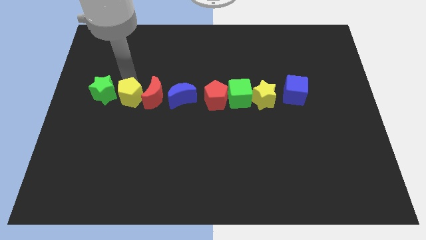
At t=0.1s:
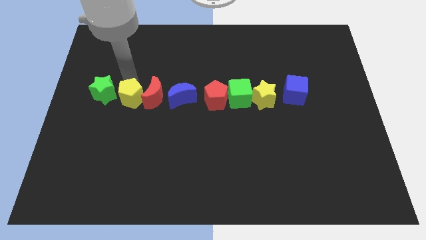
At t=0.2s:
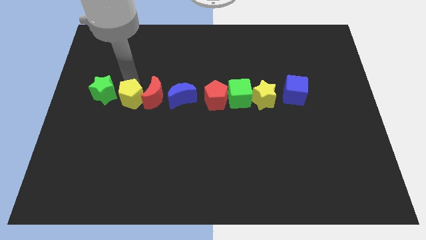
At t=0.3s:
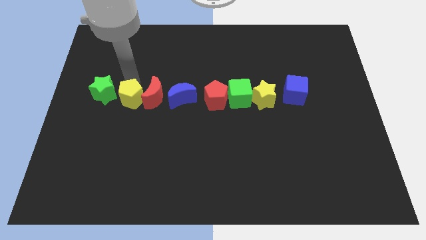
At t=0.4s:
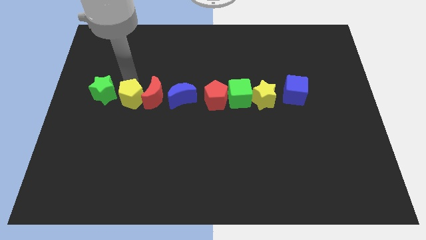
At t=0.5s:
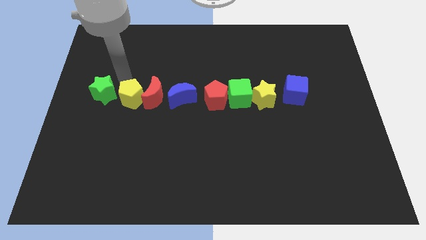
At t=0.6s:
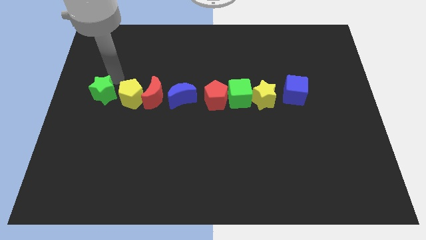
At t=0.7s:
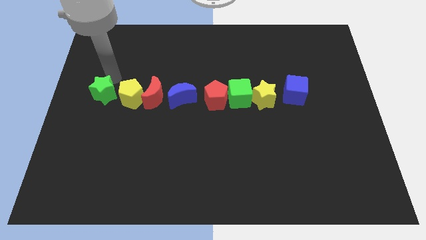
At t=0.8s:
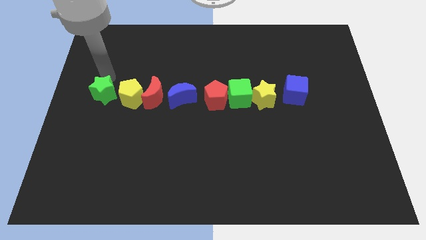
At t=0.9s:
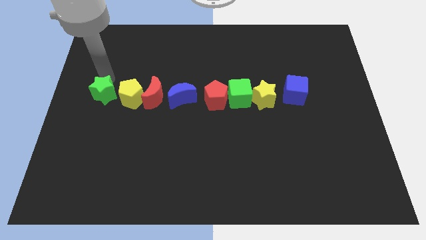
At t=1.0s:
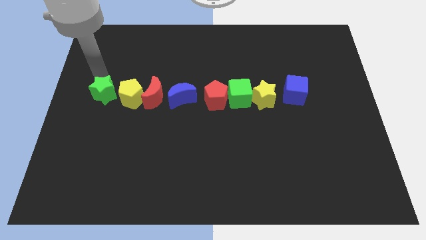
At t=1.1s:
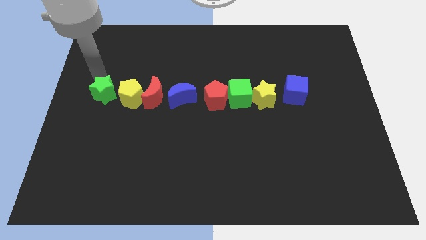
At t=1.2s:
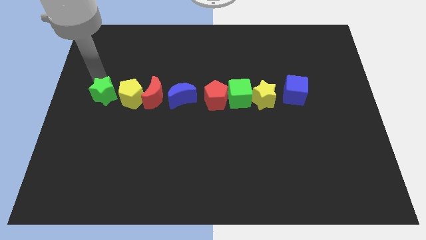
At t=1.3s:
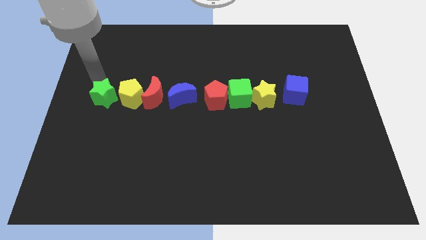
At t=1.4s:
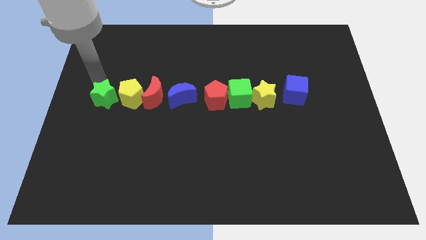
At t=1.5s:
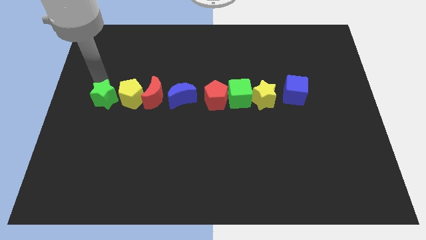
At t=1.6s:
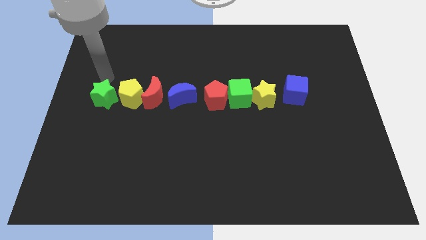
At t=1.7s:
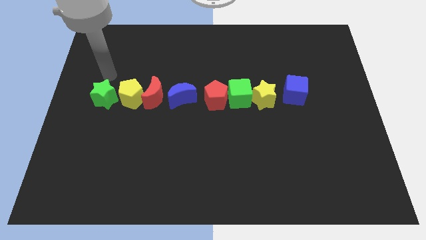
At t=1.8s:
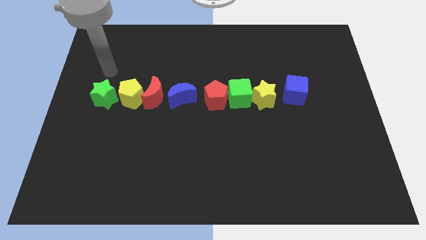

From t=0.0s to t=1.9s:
arrange all the blocks in a horizontal line

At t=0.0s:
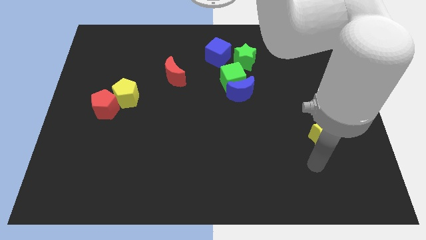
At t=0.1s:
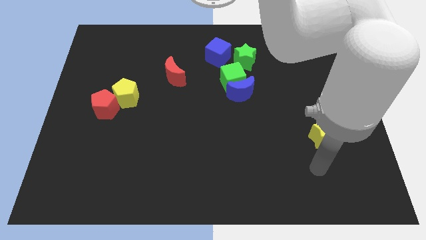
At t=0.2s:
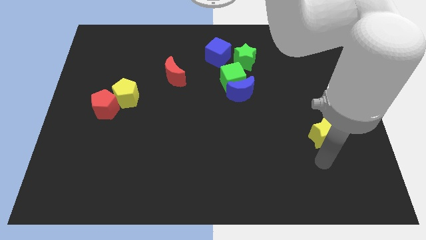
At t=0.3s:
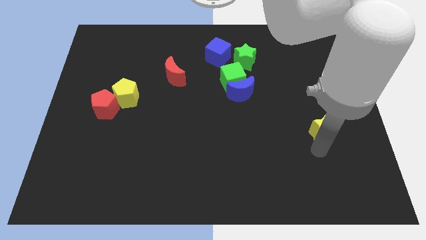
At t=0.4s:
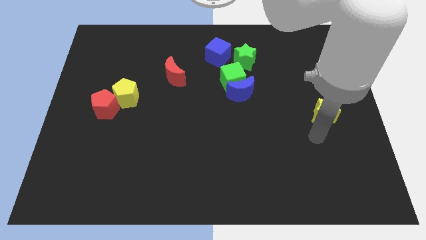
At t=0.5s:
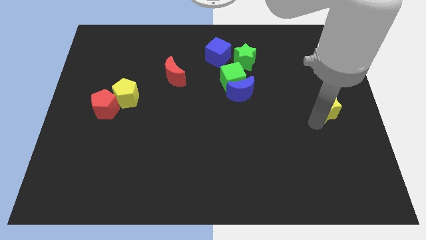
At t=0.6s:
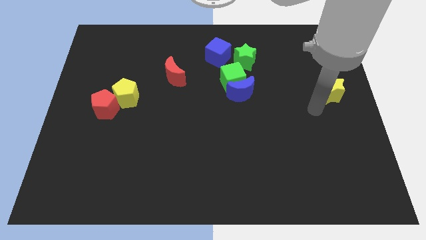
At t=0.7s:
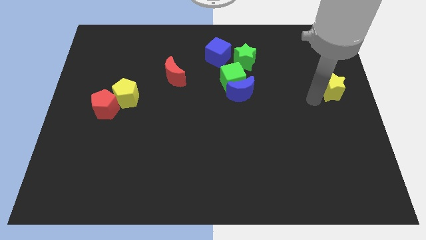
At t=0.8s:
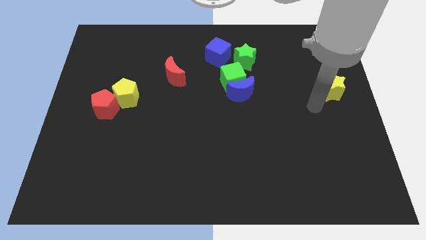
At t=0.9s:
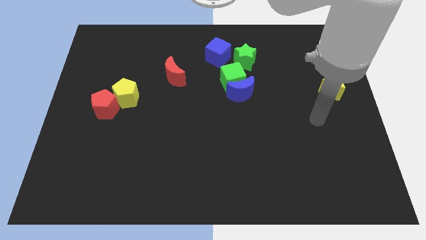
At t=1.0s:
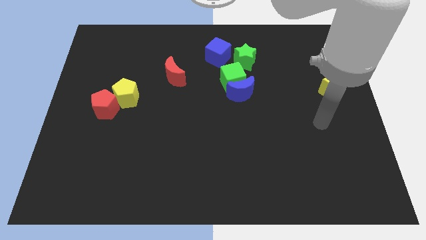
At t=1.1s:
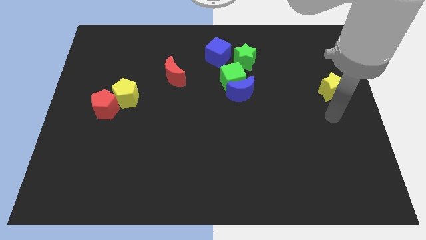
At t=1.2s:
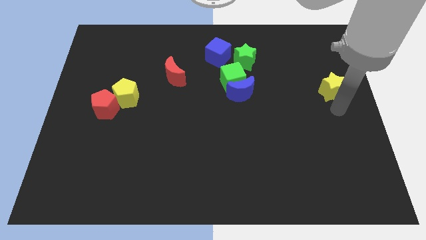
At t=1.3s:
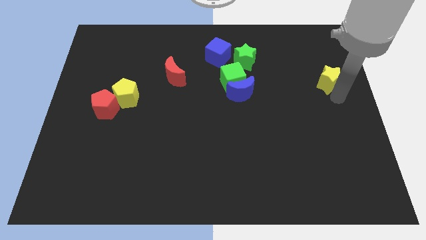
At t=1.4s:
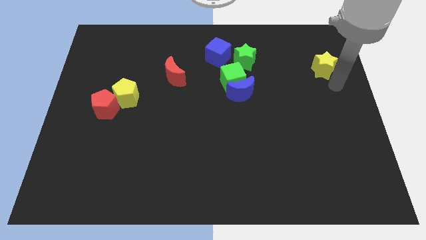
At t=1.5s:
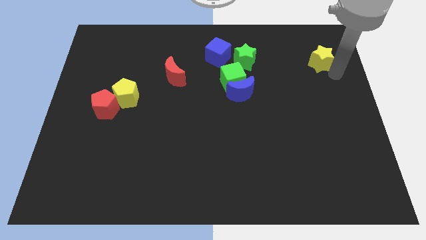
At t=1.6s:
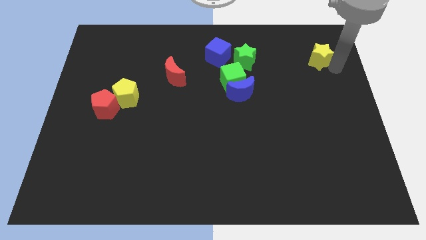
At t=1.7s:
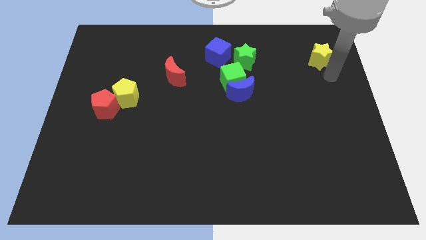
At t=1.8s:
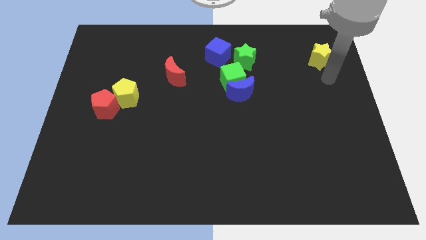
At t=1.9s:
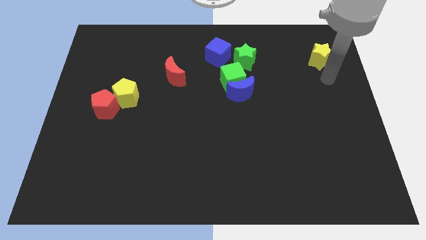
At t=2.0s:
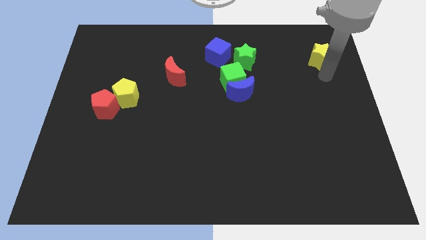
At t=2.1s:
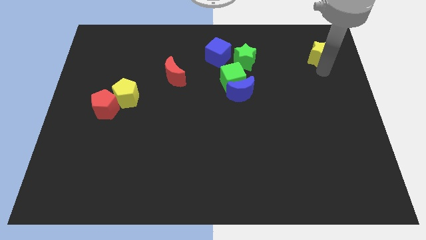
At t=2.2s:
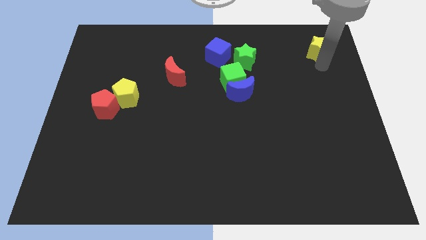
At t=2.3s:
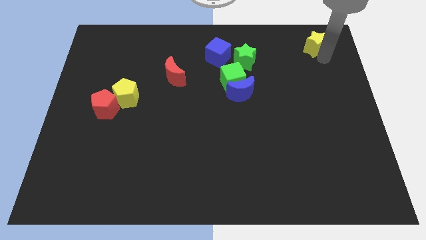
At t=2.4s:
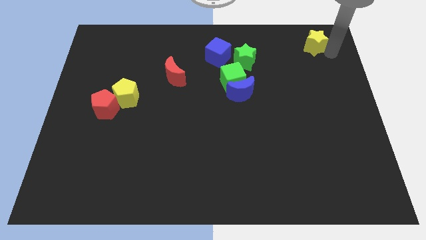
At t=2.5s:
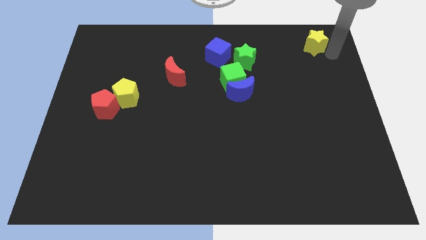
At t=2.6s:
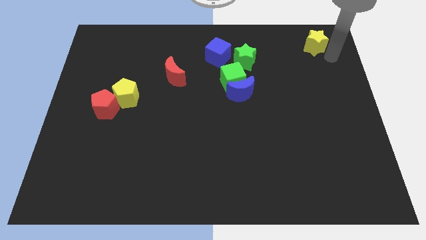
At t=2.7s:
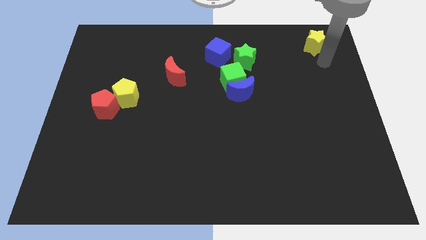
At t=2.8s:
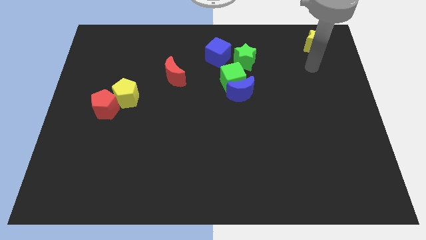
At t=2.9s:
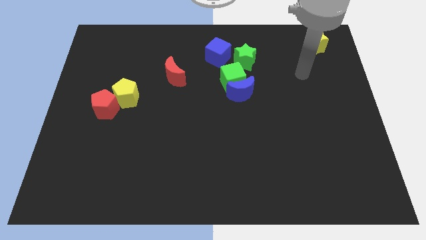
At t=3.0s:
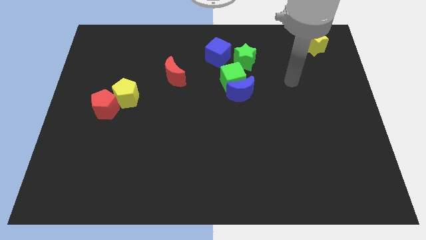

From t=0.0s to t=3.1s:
push the yellow star to the top right corner

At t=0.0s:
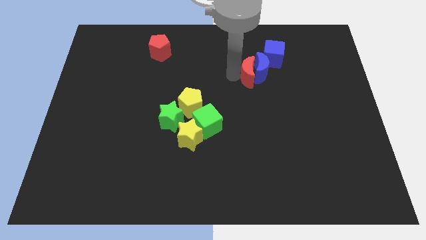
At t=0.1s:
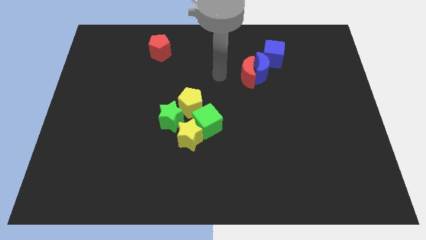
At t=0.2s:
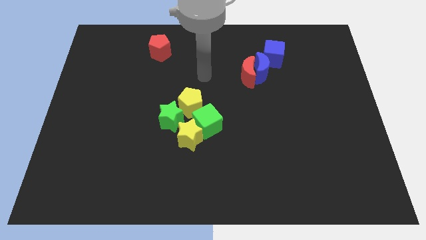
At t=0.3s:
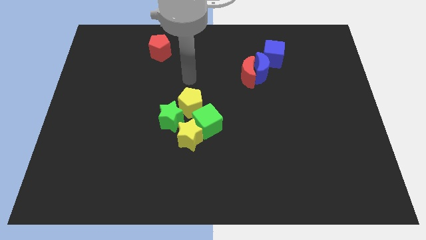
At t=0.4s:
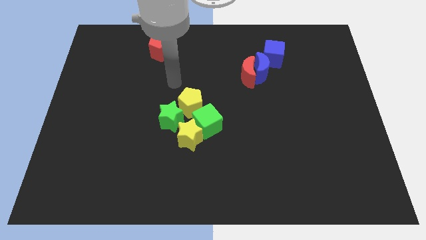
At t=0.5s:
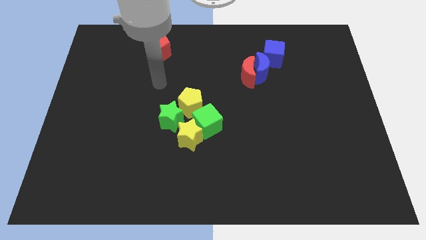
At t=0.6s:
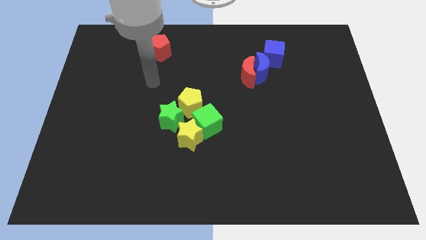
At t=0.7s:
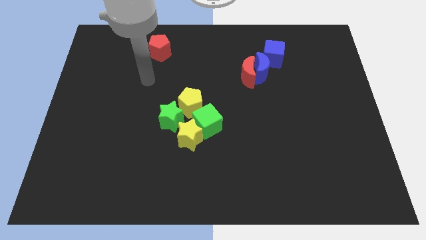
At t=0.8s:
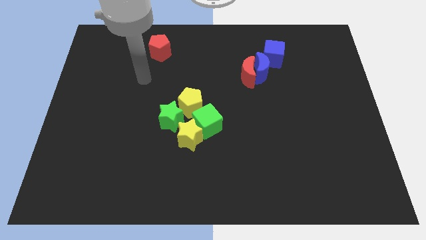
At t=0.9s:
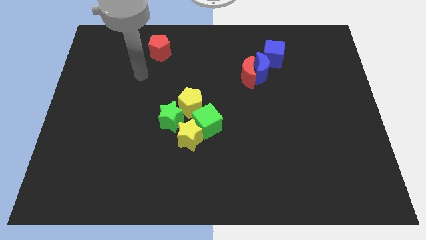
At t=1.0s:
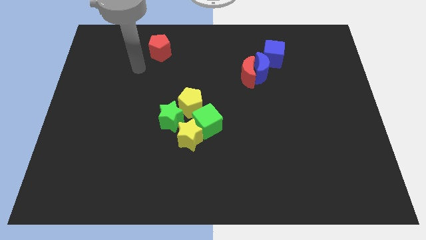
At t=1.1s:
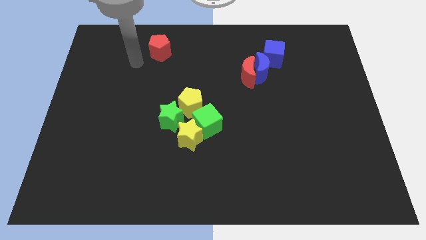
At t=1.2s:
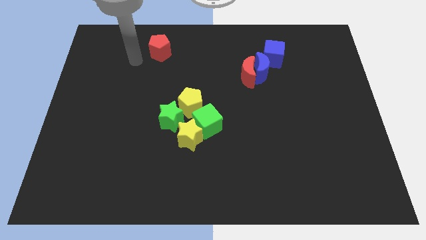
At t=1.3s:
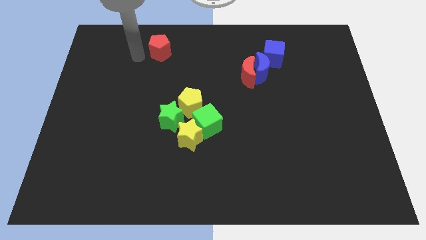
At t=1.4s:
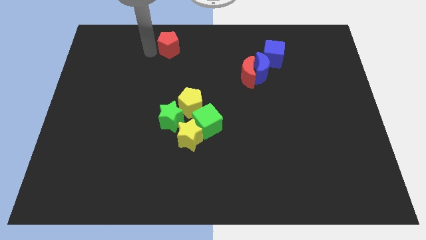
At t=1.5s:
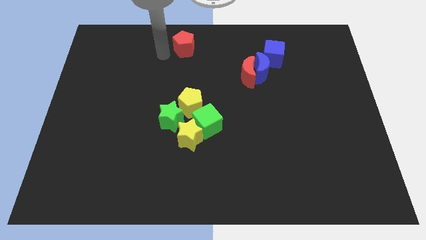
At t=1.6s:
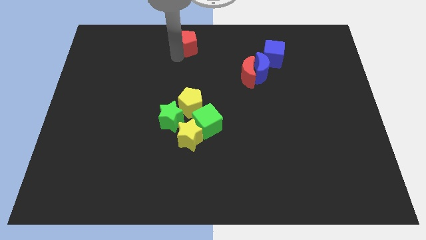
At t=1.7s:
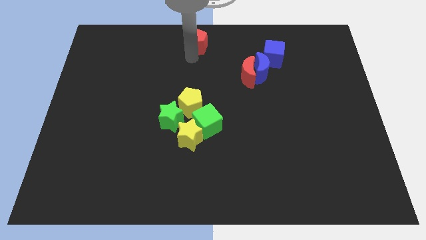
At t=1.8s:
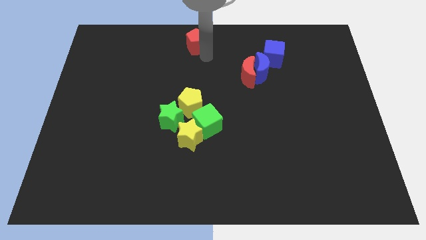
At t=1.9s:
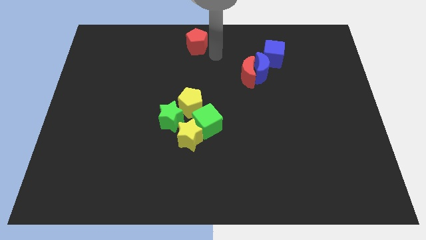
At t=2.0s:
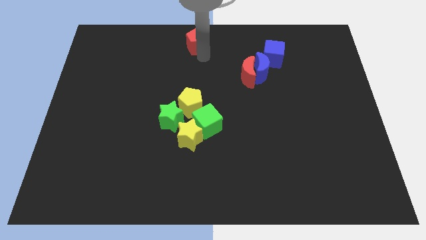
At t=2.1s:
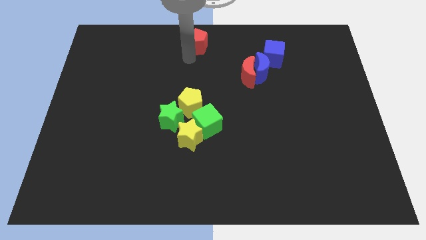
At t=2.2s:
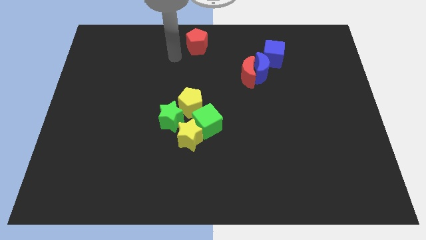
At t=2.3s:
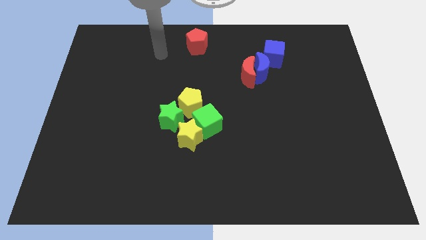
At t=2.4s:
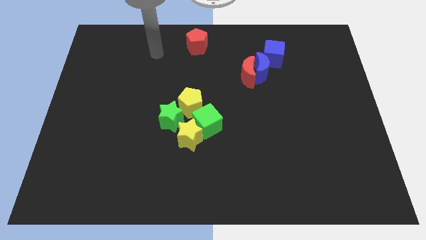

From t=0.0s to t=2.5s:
place red pentagon to the top center of board

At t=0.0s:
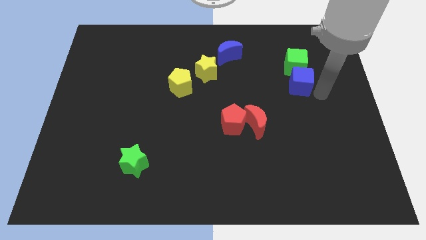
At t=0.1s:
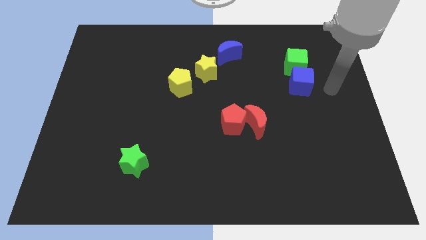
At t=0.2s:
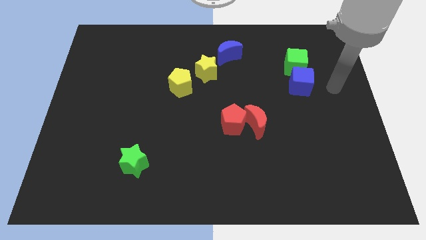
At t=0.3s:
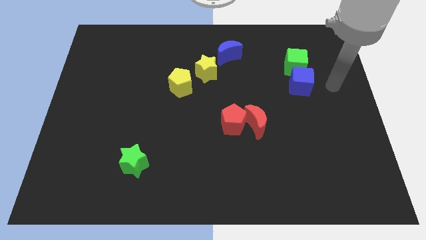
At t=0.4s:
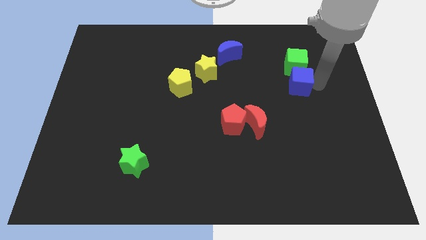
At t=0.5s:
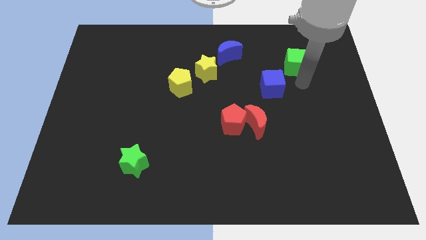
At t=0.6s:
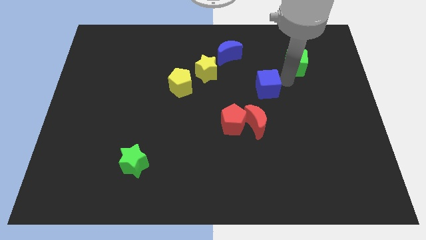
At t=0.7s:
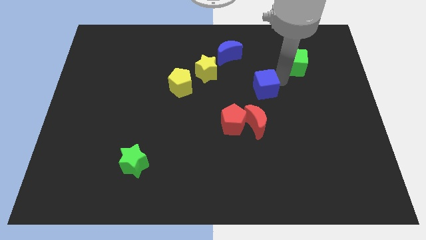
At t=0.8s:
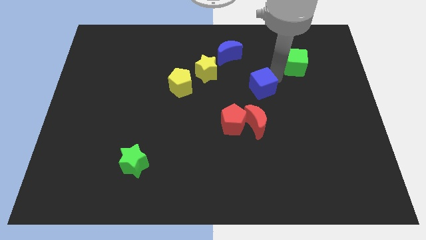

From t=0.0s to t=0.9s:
push the blue cube to the left

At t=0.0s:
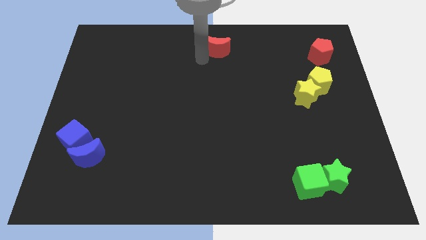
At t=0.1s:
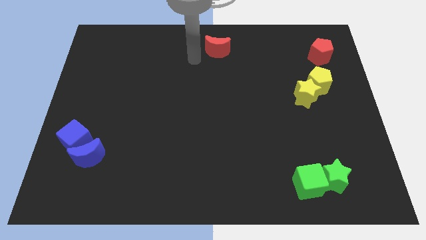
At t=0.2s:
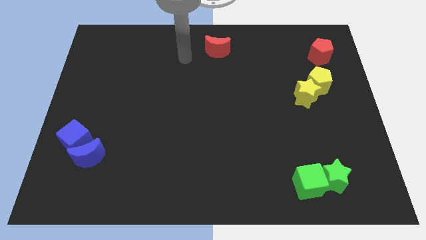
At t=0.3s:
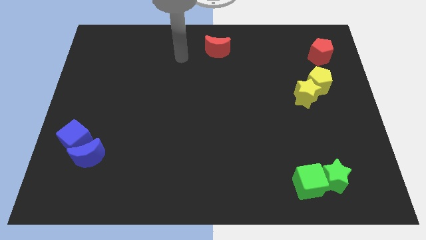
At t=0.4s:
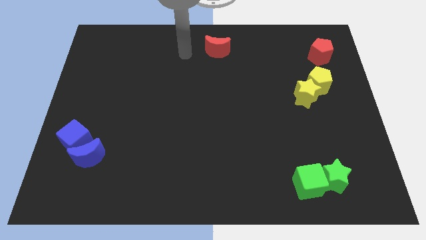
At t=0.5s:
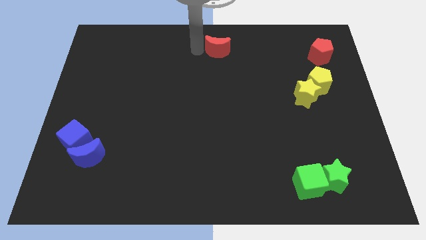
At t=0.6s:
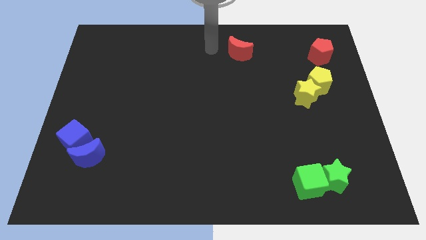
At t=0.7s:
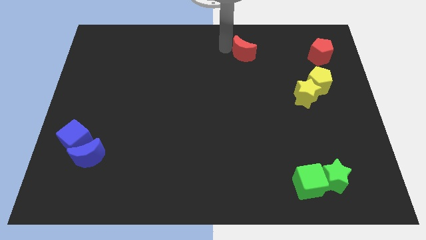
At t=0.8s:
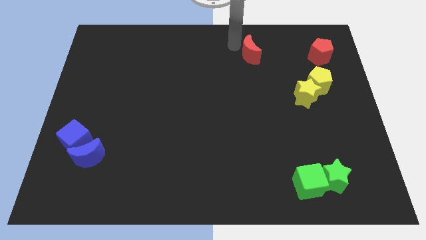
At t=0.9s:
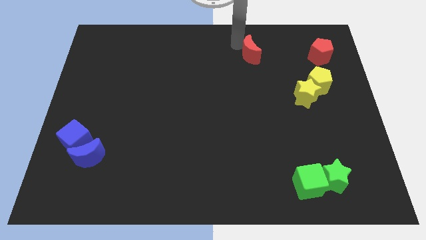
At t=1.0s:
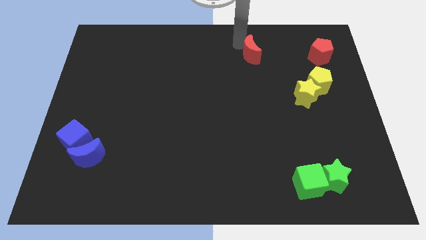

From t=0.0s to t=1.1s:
drag the red moon towards the right side of the board
